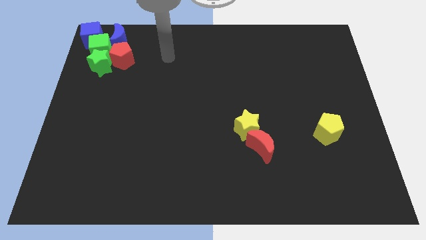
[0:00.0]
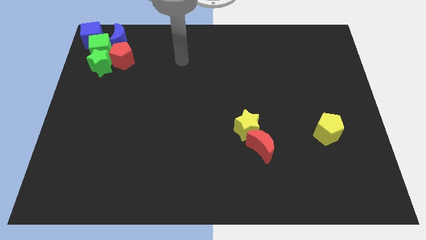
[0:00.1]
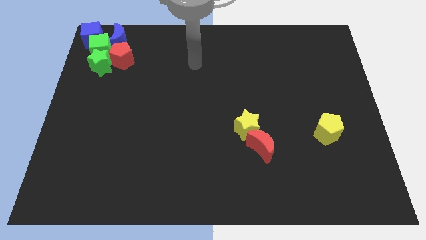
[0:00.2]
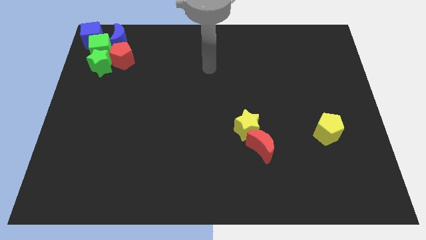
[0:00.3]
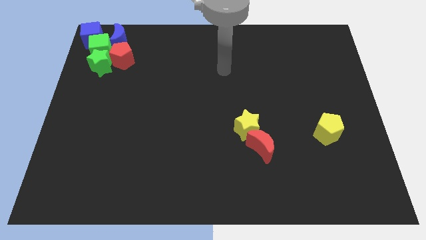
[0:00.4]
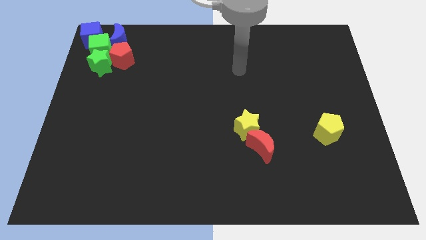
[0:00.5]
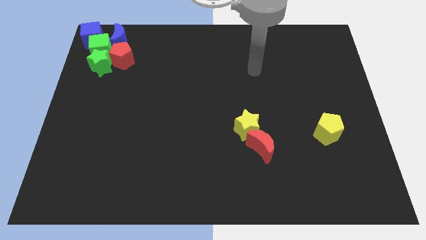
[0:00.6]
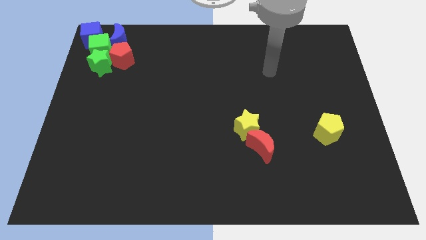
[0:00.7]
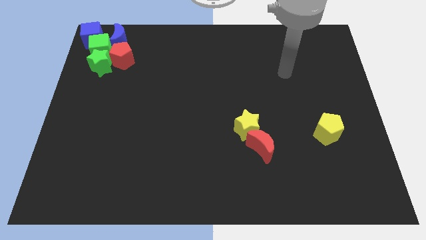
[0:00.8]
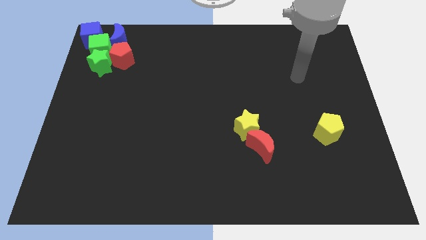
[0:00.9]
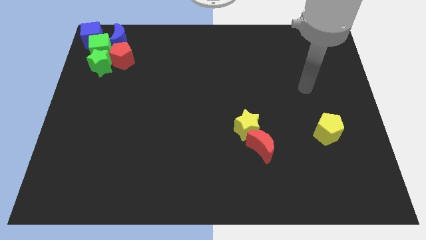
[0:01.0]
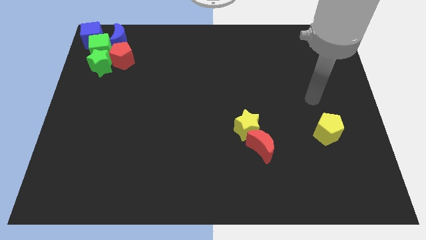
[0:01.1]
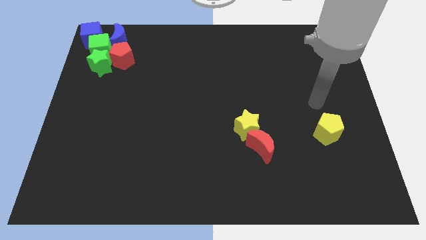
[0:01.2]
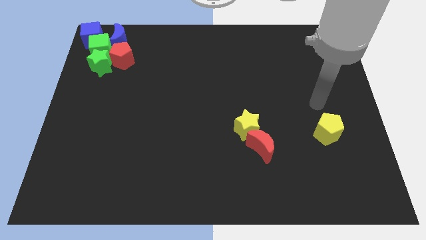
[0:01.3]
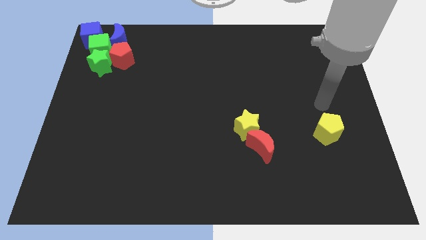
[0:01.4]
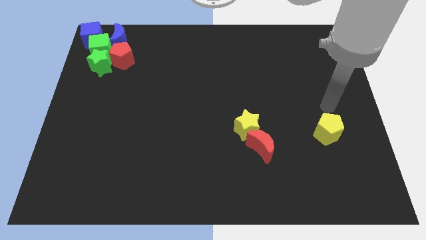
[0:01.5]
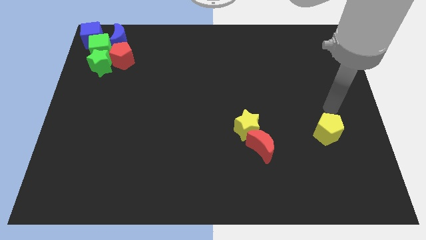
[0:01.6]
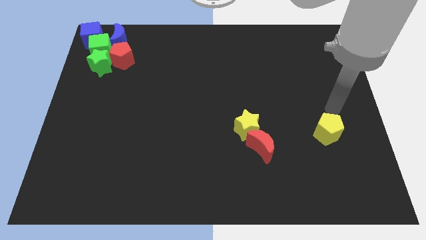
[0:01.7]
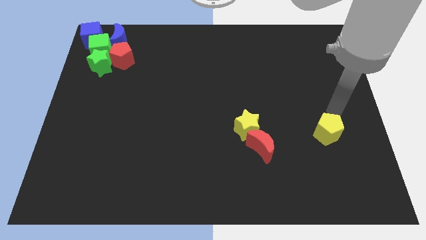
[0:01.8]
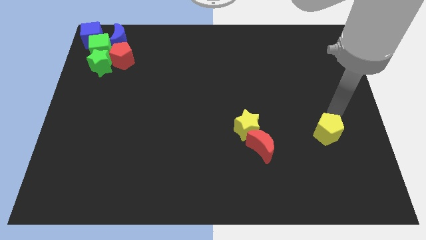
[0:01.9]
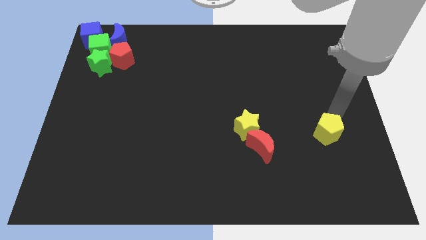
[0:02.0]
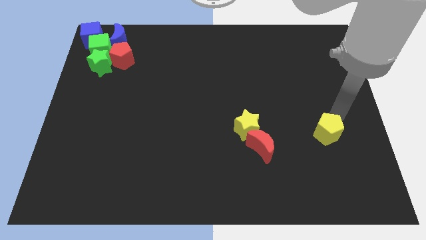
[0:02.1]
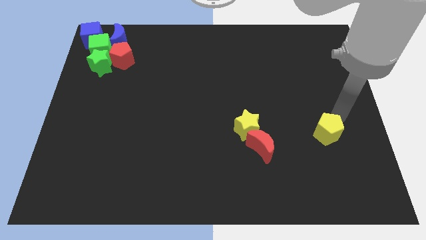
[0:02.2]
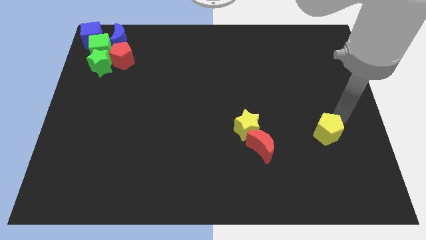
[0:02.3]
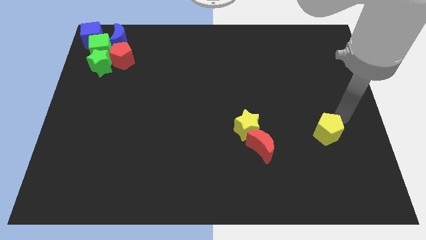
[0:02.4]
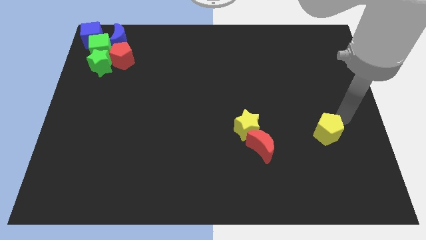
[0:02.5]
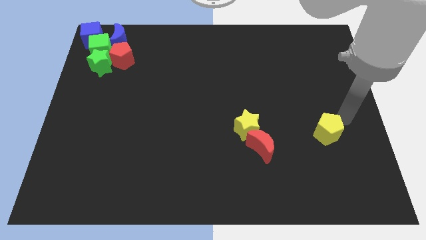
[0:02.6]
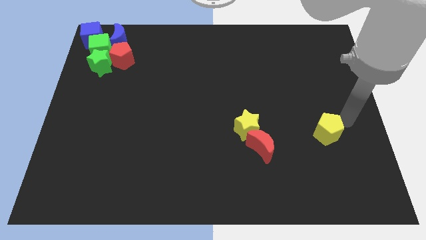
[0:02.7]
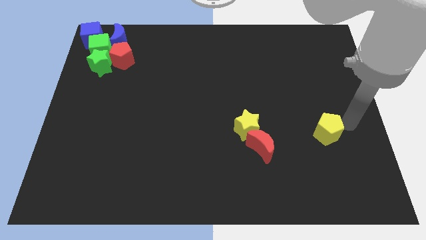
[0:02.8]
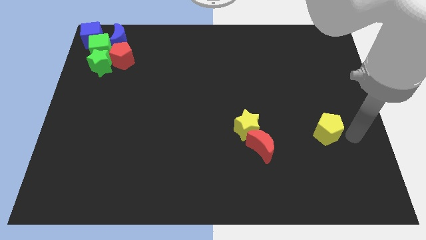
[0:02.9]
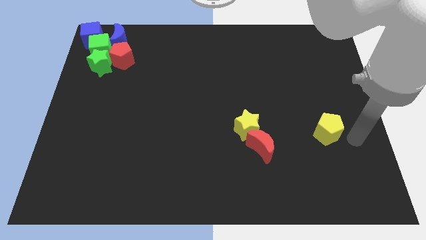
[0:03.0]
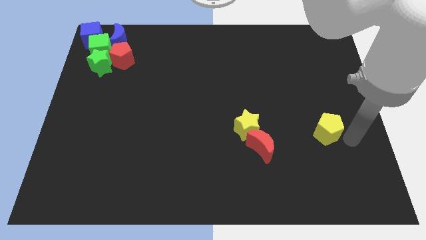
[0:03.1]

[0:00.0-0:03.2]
point your arm to the right of the yellow pentagon

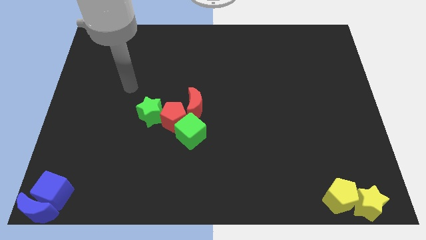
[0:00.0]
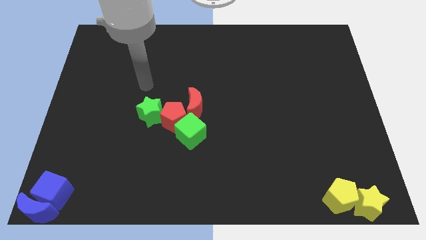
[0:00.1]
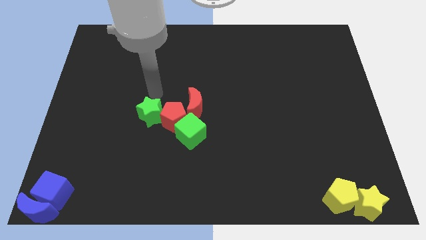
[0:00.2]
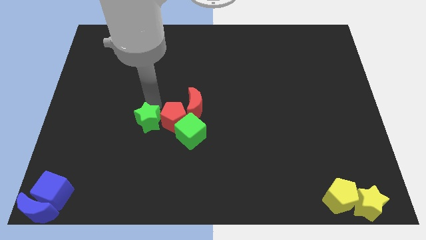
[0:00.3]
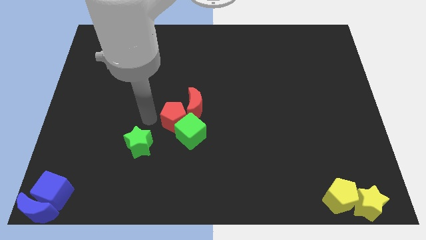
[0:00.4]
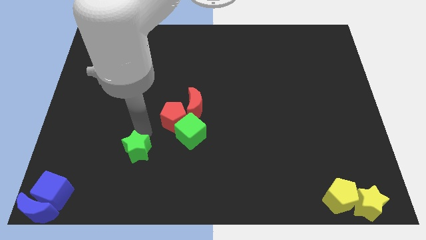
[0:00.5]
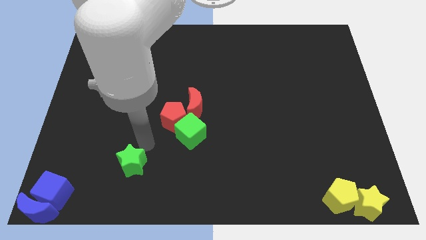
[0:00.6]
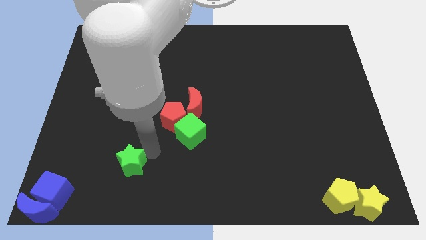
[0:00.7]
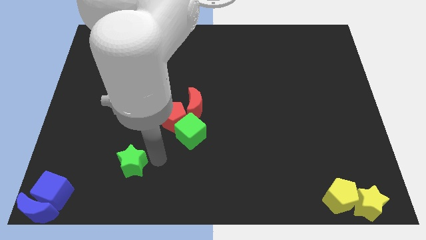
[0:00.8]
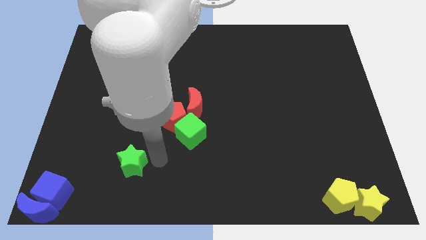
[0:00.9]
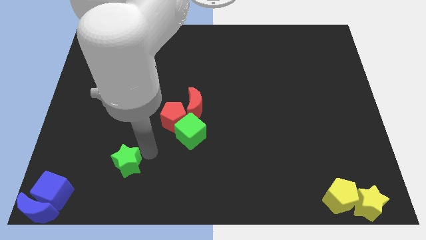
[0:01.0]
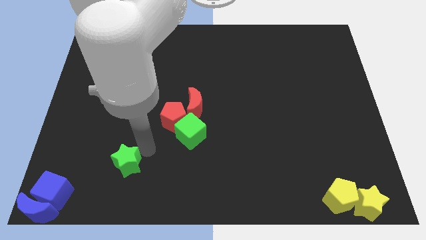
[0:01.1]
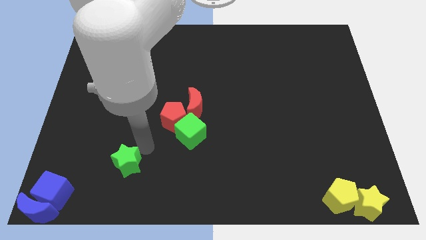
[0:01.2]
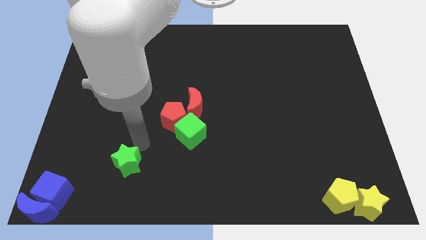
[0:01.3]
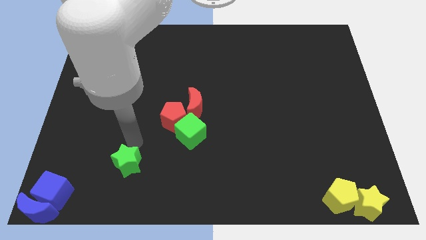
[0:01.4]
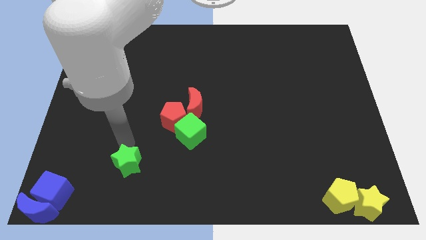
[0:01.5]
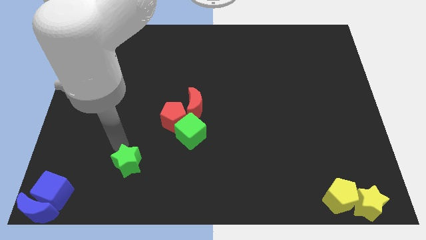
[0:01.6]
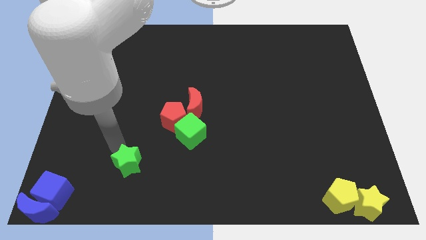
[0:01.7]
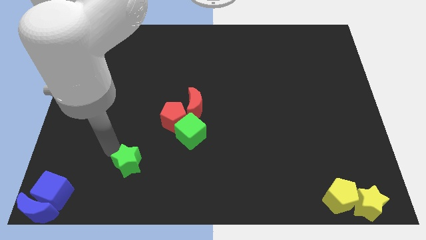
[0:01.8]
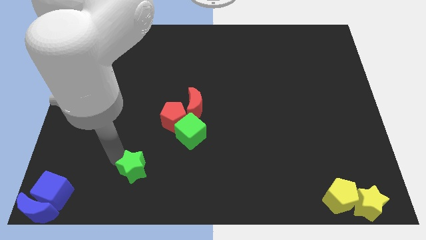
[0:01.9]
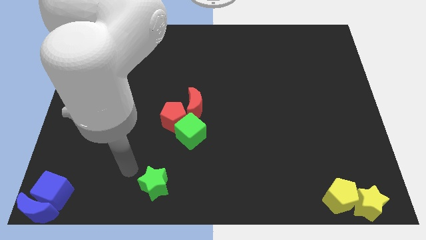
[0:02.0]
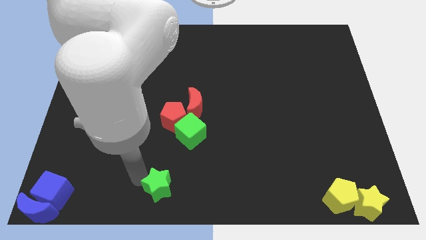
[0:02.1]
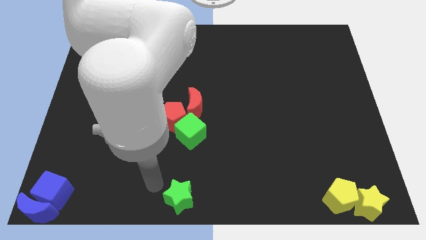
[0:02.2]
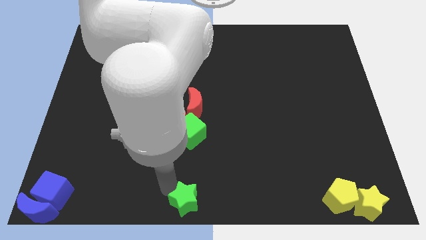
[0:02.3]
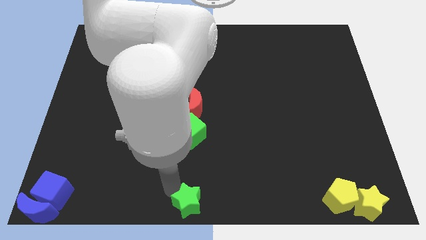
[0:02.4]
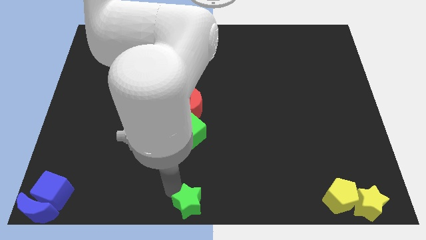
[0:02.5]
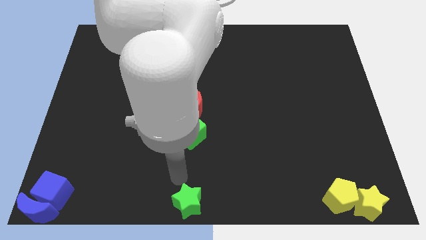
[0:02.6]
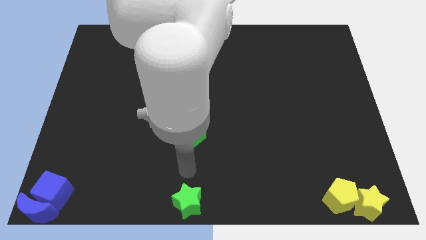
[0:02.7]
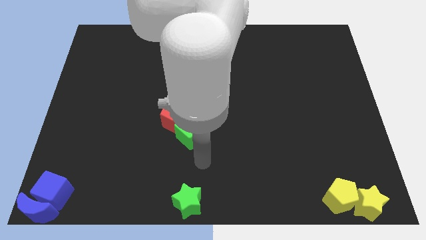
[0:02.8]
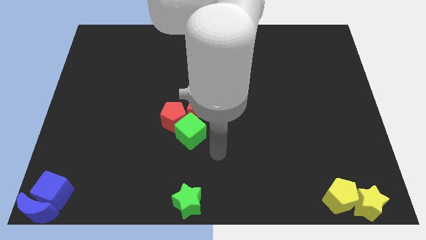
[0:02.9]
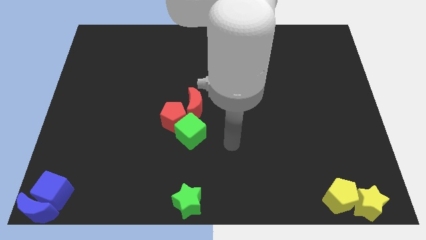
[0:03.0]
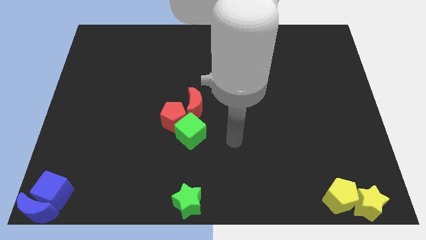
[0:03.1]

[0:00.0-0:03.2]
place the green star on the bottom middle of the board

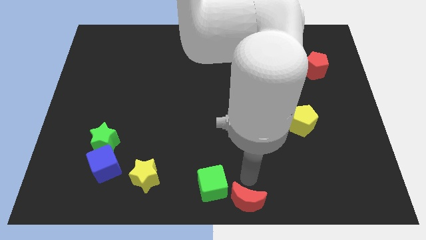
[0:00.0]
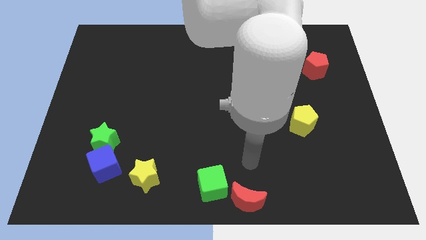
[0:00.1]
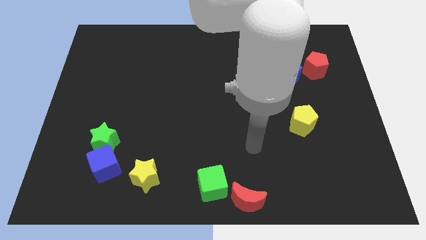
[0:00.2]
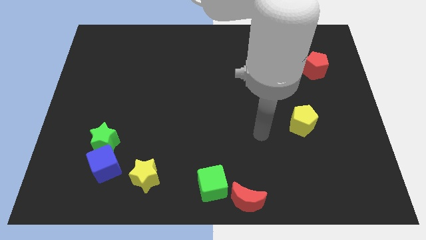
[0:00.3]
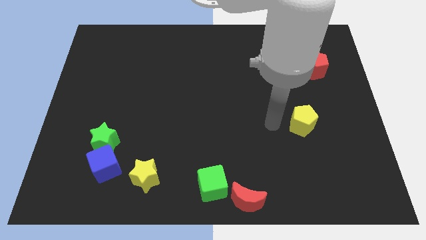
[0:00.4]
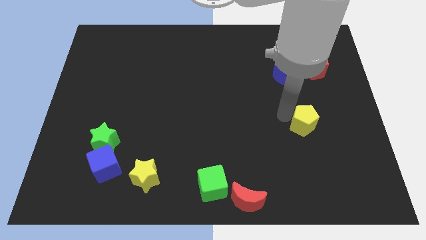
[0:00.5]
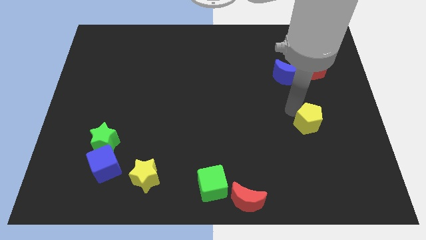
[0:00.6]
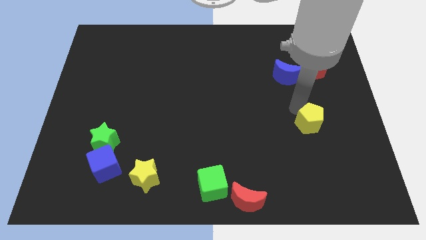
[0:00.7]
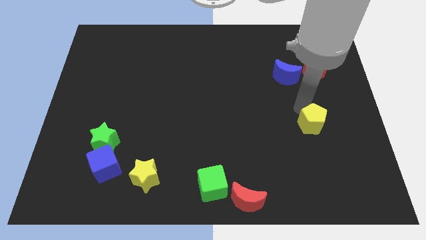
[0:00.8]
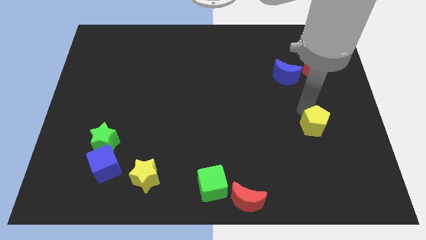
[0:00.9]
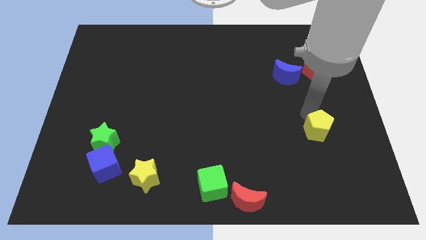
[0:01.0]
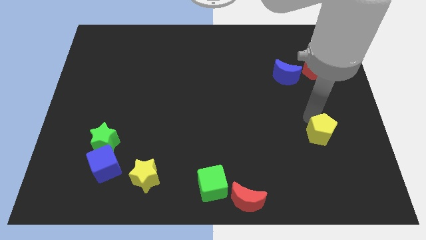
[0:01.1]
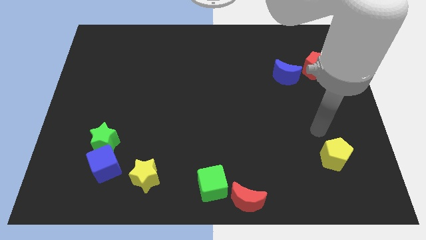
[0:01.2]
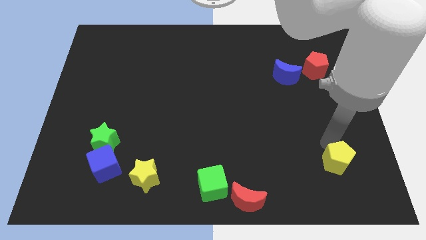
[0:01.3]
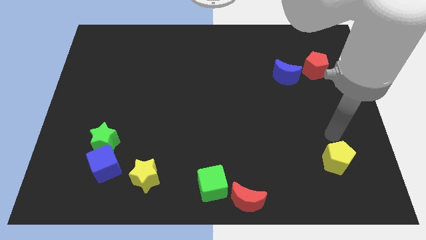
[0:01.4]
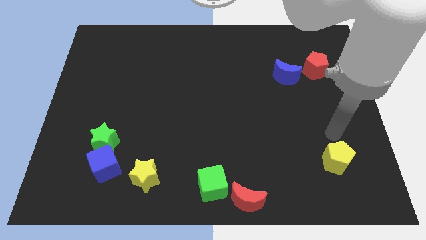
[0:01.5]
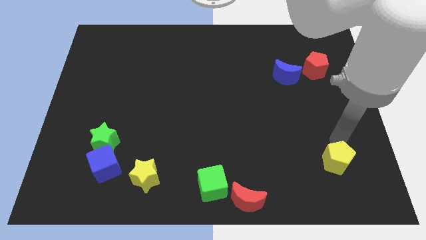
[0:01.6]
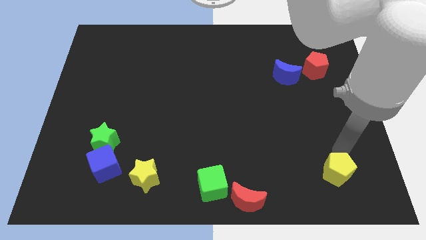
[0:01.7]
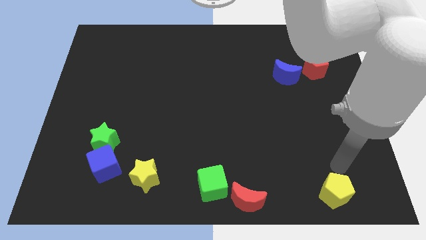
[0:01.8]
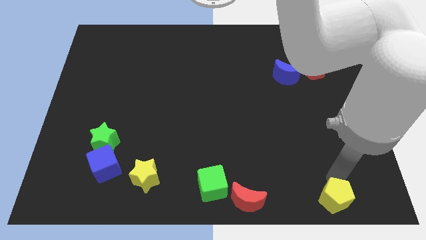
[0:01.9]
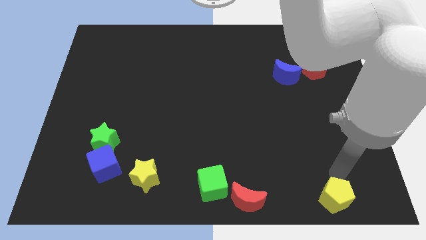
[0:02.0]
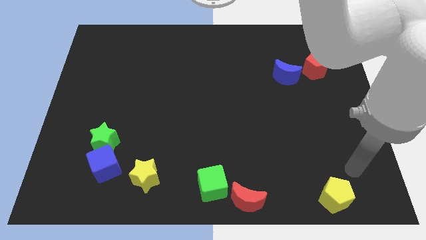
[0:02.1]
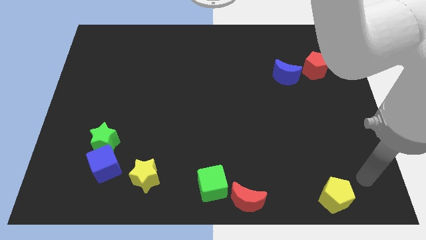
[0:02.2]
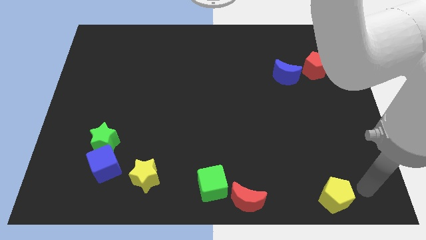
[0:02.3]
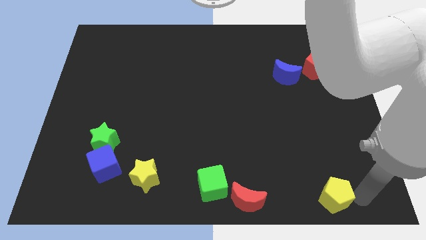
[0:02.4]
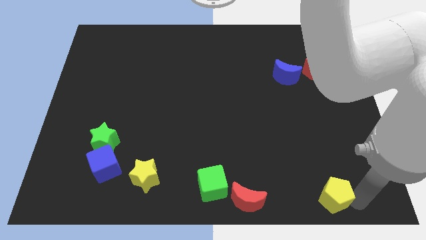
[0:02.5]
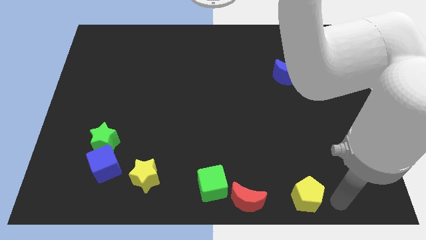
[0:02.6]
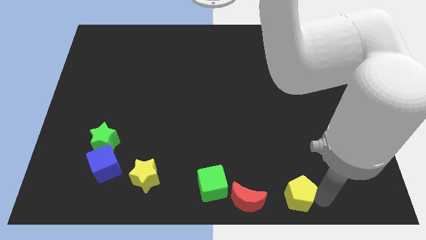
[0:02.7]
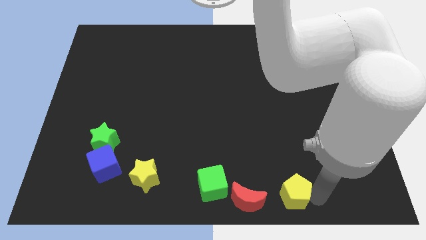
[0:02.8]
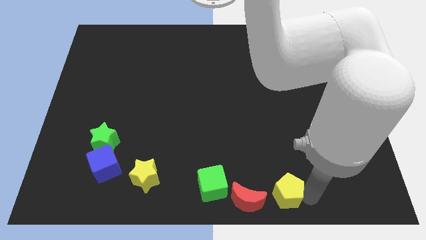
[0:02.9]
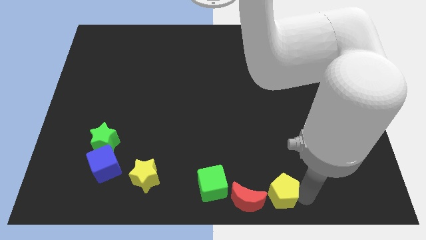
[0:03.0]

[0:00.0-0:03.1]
put the yellow pentagon parallel right to the red moon
